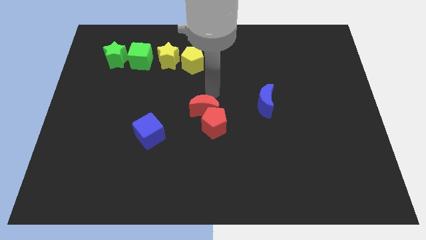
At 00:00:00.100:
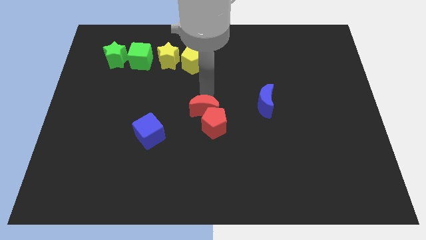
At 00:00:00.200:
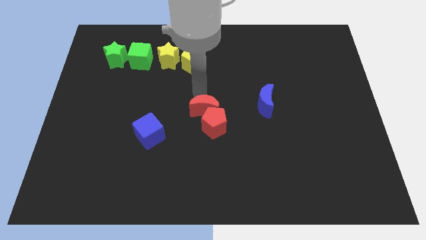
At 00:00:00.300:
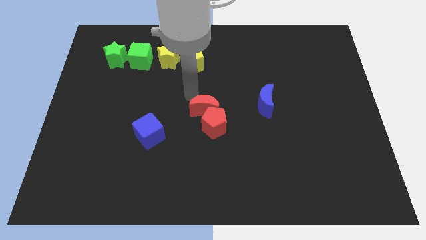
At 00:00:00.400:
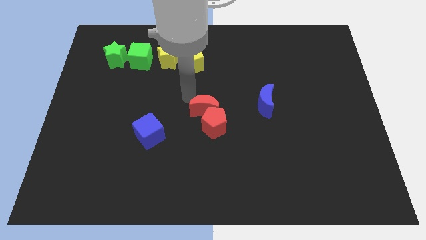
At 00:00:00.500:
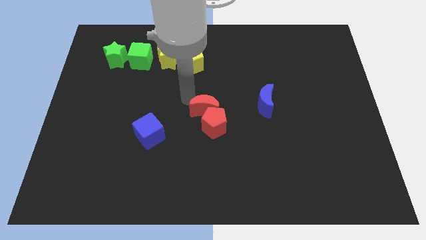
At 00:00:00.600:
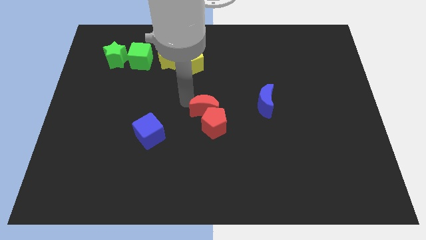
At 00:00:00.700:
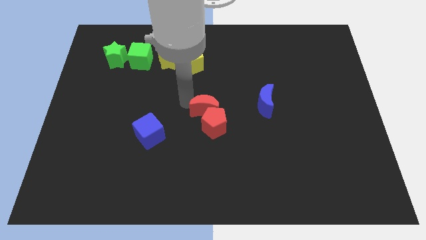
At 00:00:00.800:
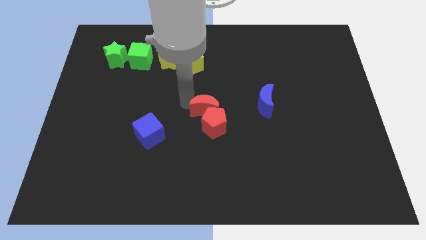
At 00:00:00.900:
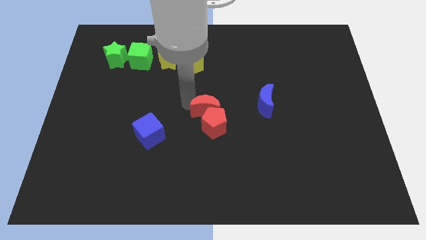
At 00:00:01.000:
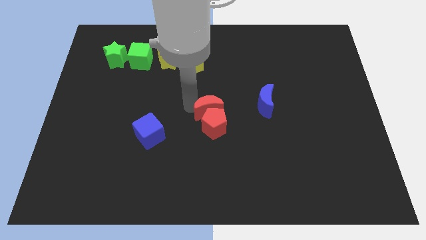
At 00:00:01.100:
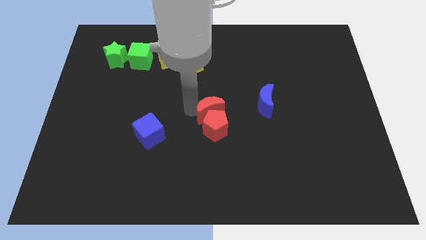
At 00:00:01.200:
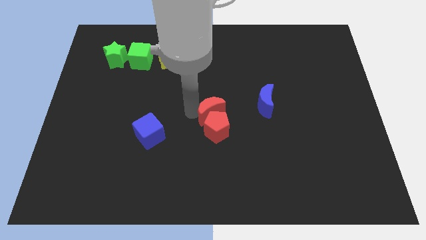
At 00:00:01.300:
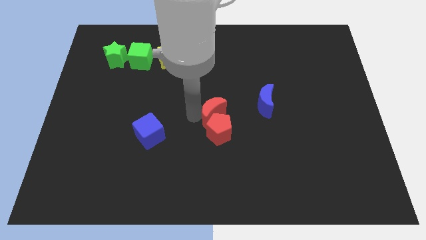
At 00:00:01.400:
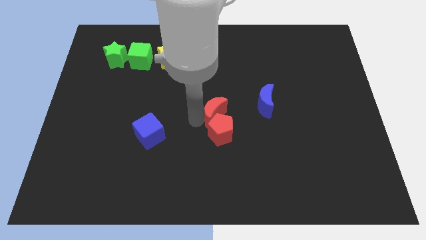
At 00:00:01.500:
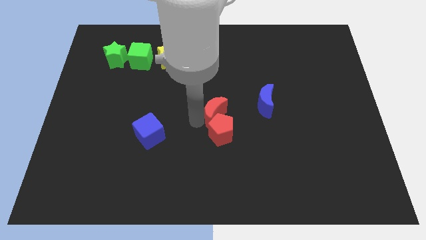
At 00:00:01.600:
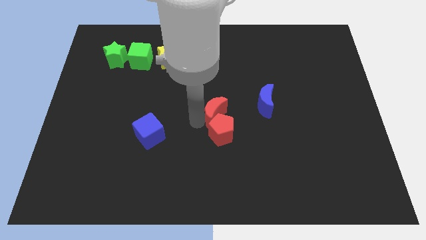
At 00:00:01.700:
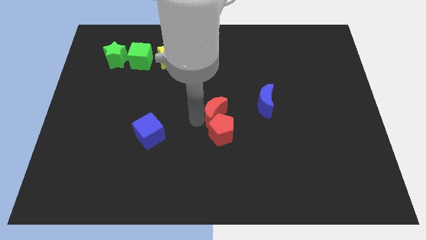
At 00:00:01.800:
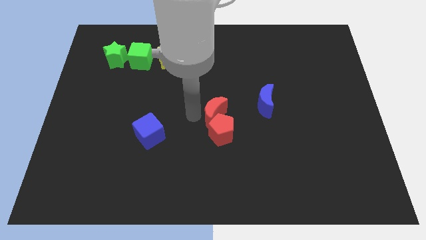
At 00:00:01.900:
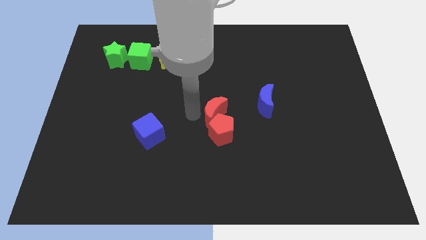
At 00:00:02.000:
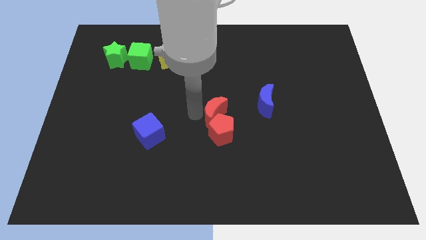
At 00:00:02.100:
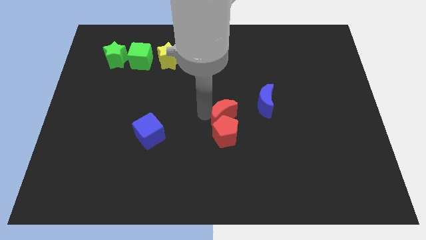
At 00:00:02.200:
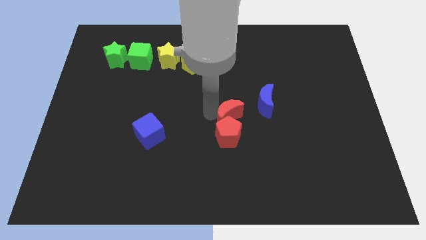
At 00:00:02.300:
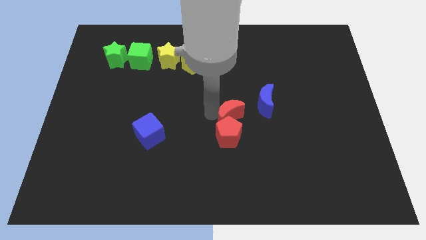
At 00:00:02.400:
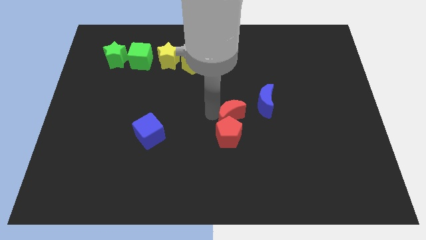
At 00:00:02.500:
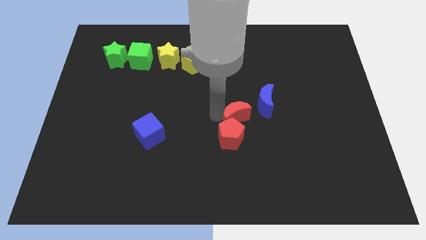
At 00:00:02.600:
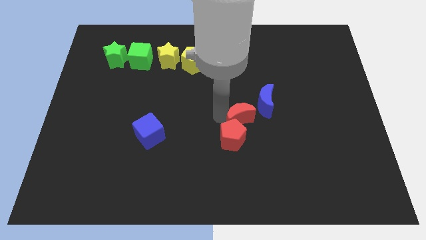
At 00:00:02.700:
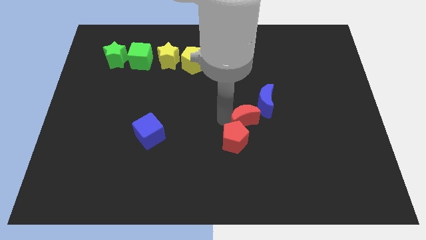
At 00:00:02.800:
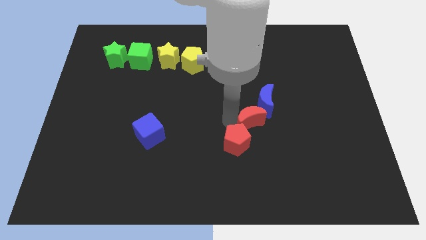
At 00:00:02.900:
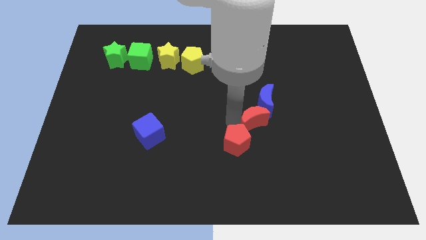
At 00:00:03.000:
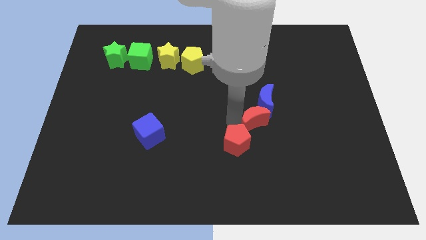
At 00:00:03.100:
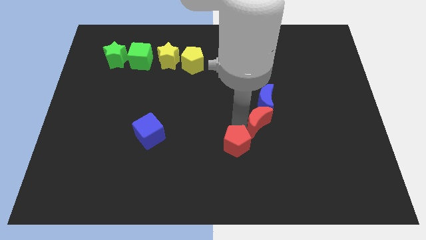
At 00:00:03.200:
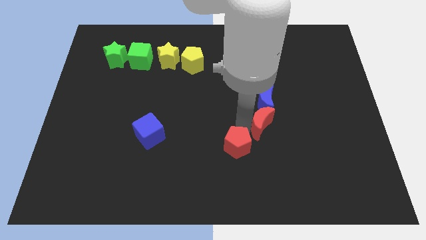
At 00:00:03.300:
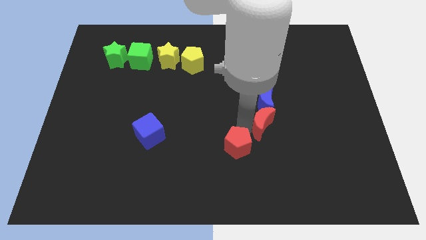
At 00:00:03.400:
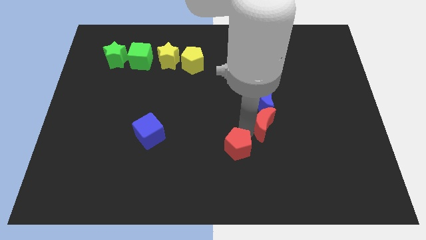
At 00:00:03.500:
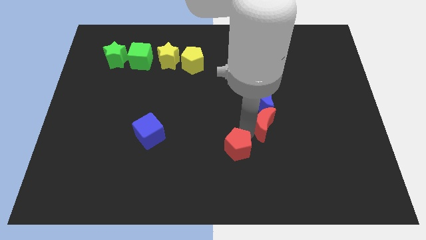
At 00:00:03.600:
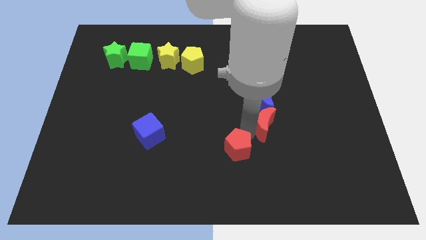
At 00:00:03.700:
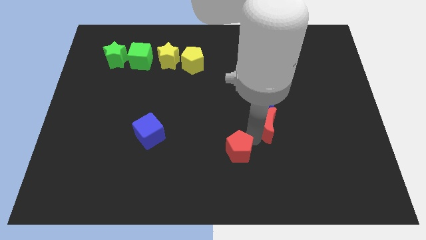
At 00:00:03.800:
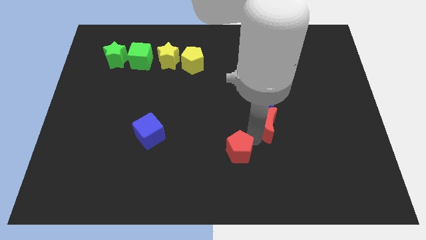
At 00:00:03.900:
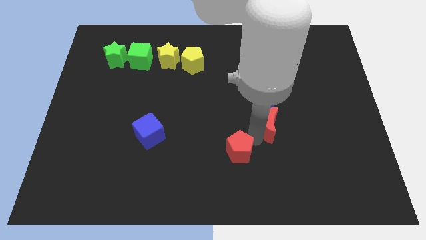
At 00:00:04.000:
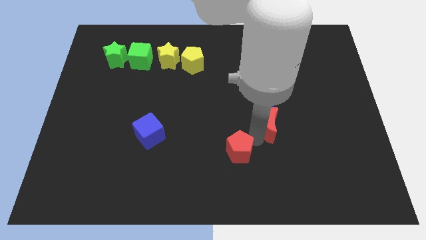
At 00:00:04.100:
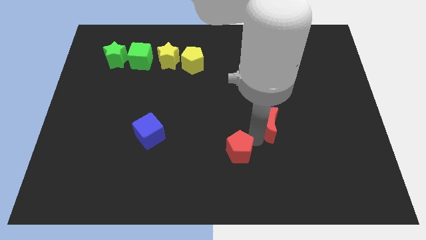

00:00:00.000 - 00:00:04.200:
move the red crescent below the blue crescent

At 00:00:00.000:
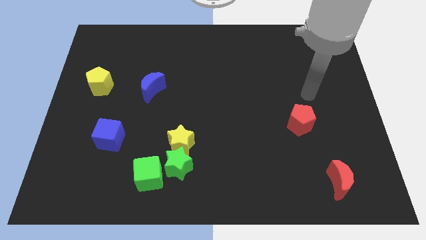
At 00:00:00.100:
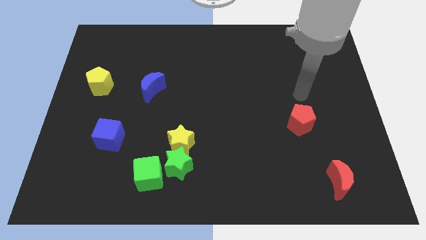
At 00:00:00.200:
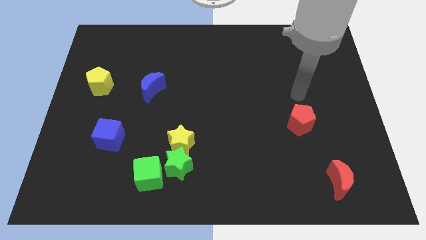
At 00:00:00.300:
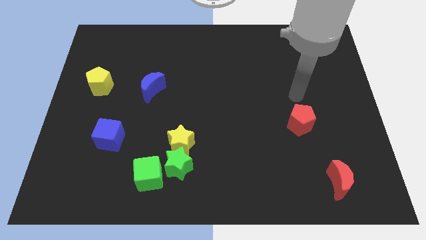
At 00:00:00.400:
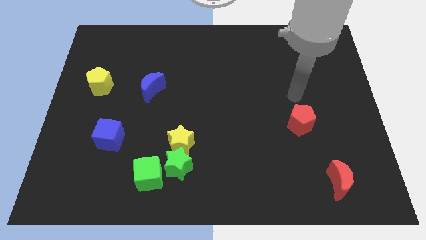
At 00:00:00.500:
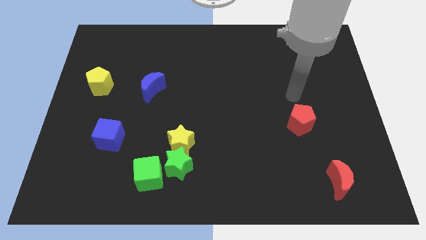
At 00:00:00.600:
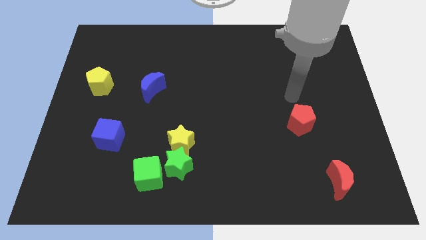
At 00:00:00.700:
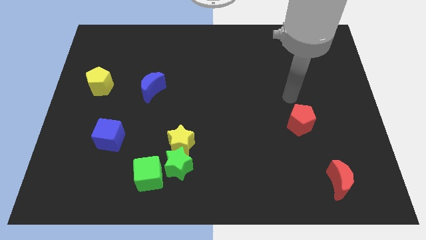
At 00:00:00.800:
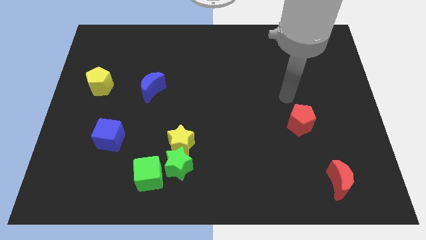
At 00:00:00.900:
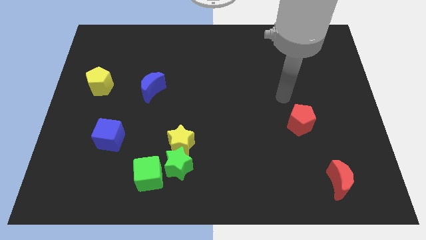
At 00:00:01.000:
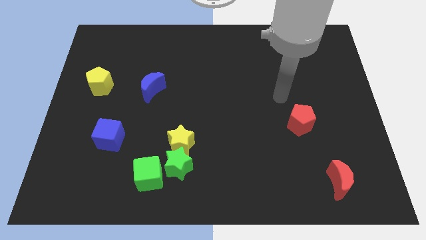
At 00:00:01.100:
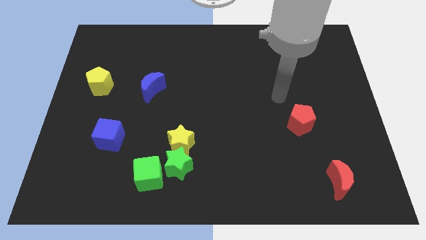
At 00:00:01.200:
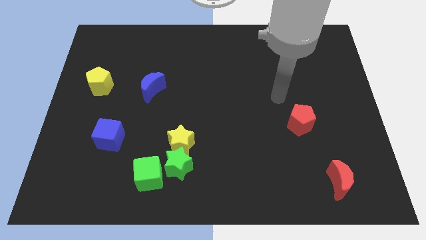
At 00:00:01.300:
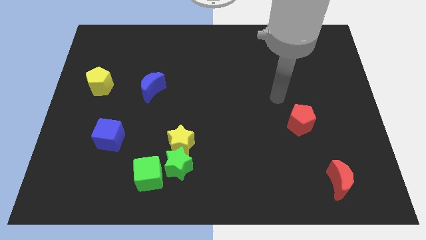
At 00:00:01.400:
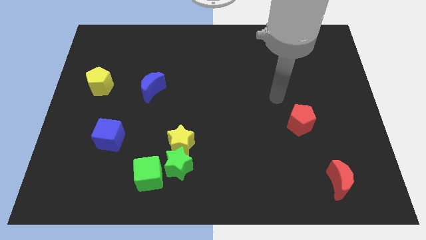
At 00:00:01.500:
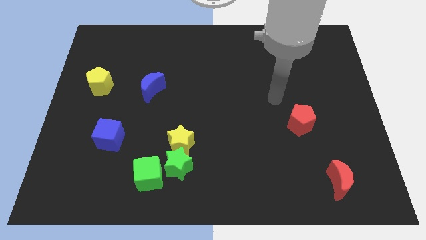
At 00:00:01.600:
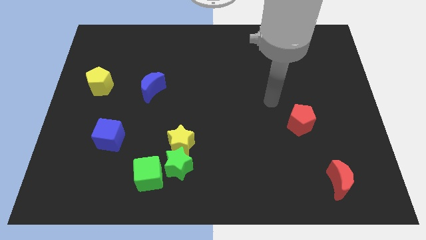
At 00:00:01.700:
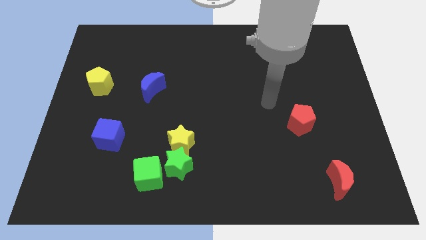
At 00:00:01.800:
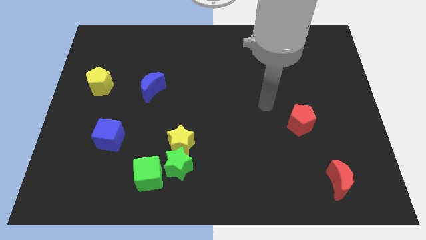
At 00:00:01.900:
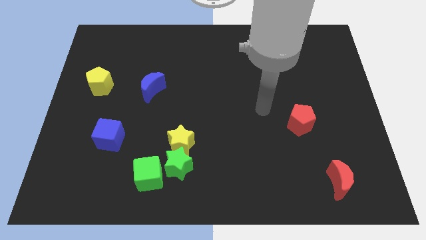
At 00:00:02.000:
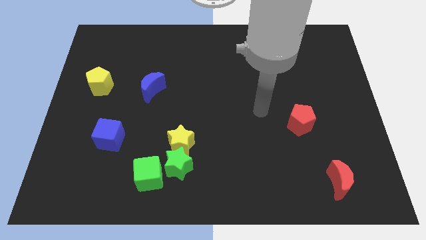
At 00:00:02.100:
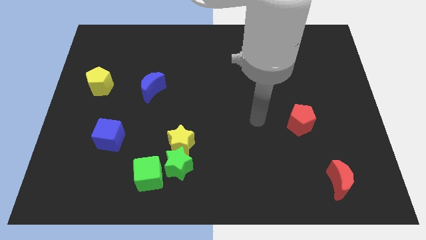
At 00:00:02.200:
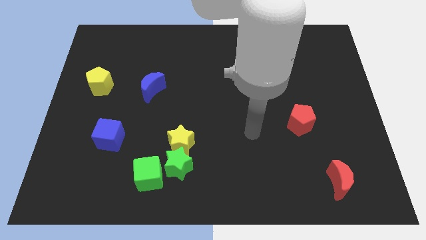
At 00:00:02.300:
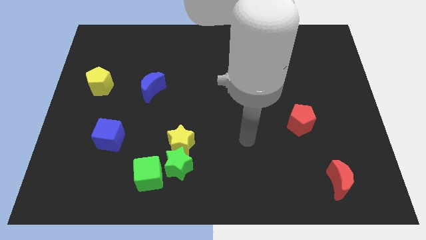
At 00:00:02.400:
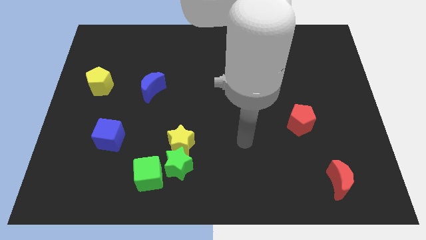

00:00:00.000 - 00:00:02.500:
place the arm in between the red pentagon and green star

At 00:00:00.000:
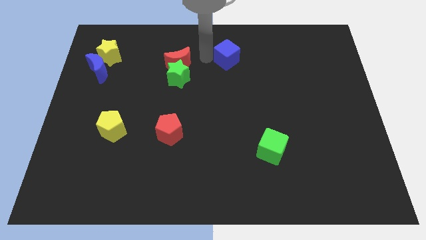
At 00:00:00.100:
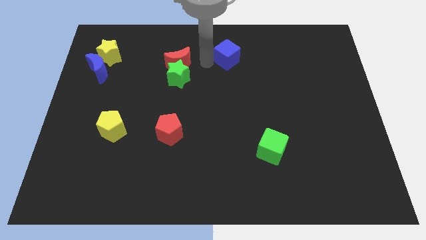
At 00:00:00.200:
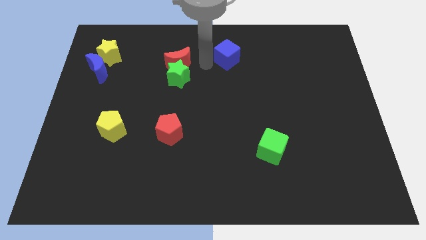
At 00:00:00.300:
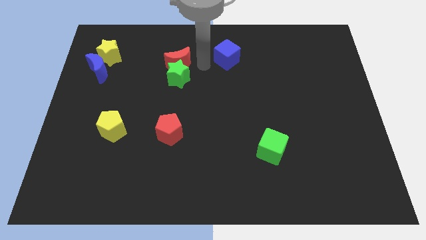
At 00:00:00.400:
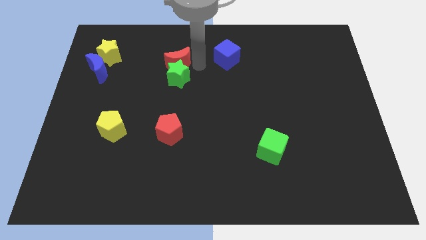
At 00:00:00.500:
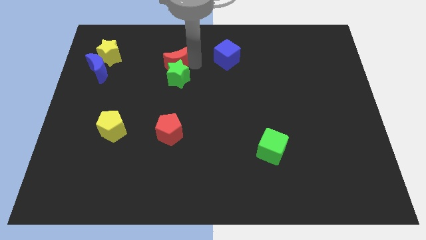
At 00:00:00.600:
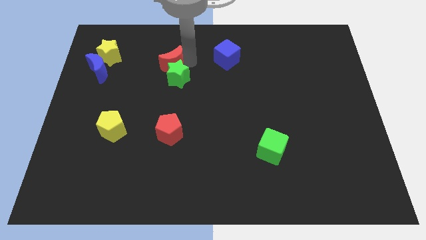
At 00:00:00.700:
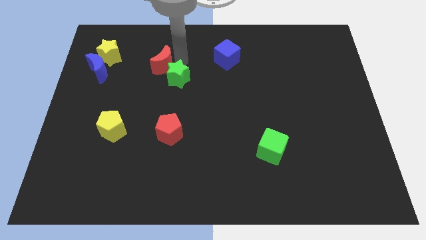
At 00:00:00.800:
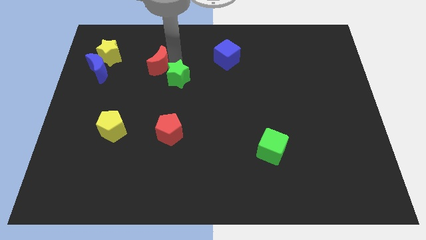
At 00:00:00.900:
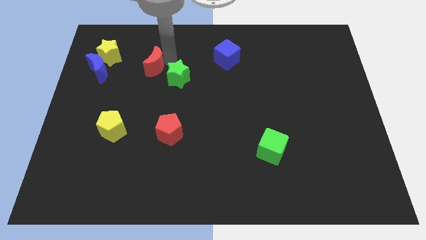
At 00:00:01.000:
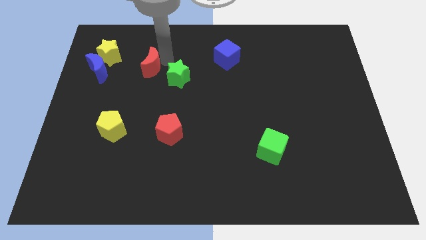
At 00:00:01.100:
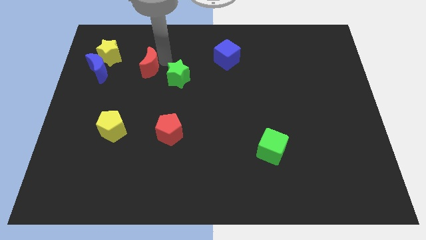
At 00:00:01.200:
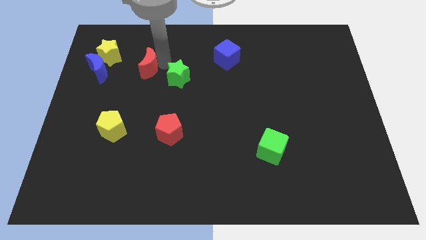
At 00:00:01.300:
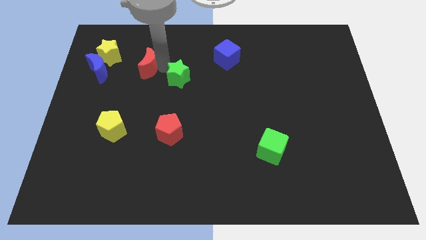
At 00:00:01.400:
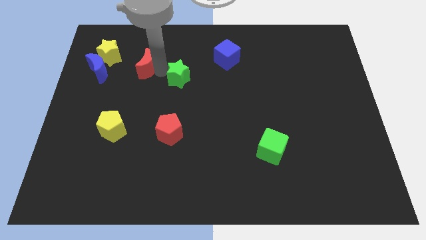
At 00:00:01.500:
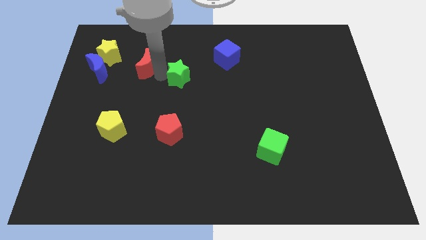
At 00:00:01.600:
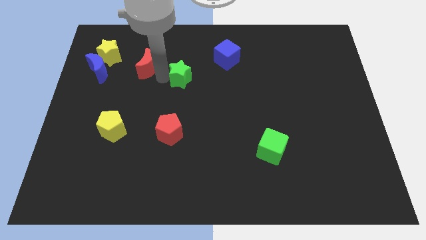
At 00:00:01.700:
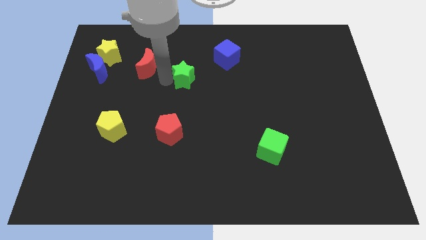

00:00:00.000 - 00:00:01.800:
separate the red moon from the green star

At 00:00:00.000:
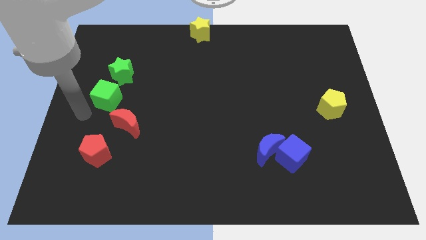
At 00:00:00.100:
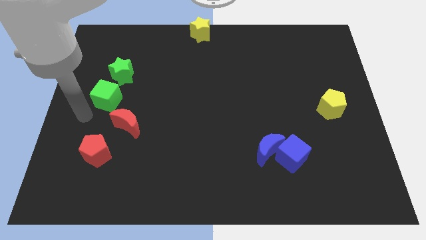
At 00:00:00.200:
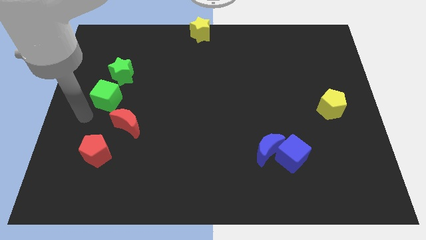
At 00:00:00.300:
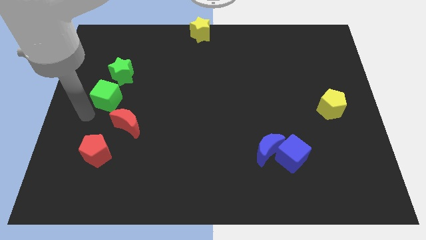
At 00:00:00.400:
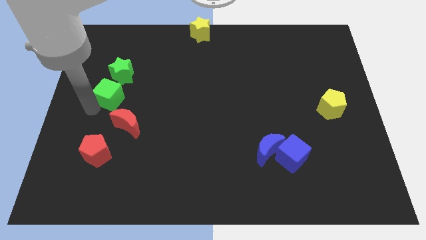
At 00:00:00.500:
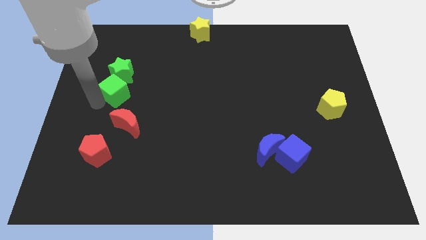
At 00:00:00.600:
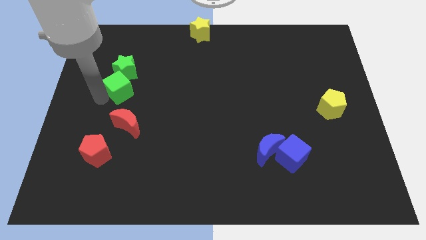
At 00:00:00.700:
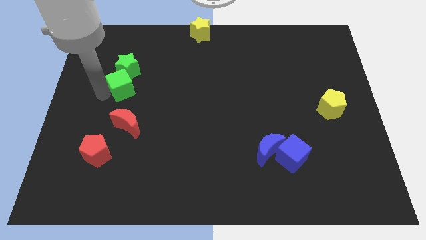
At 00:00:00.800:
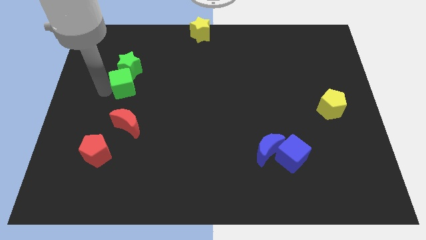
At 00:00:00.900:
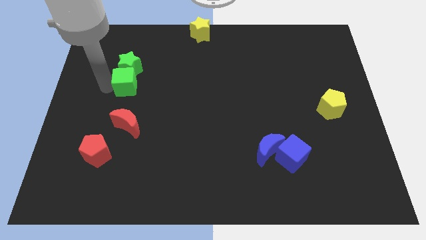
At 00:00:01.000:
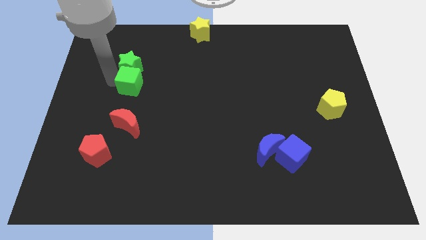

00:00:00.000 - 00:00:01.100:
move the green cube into green star
